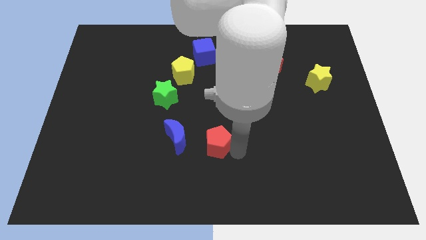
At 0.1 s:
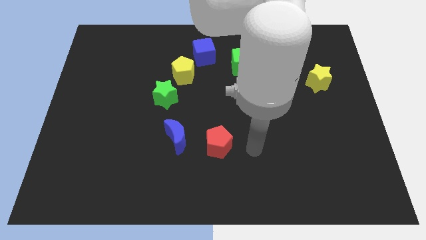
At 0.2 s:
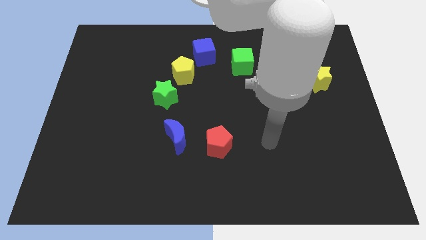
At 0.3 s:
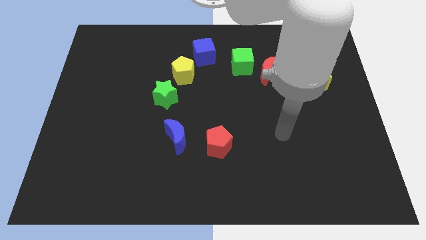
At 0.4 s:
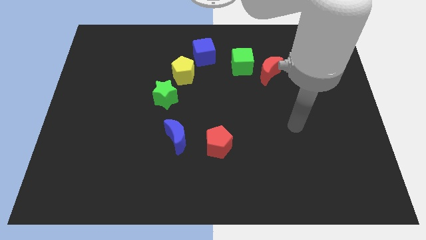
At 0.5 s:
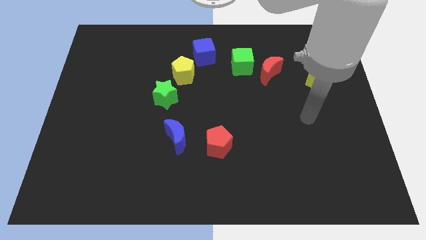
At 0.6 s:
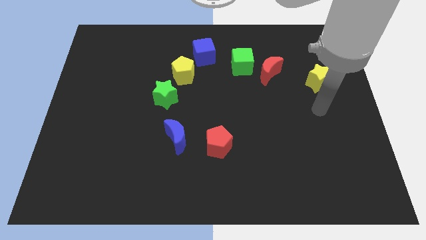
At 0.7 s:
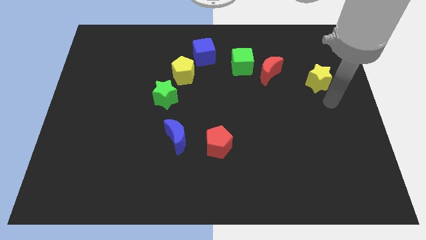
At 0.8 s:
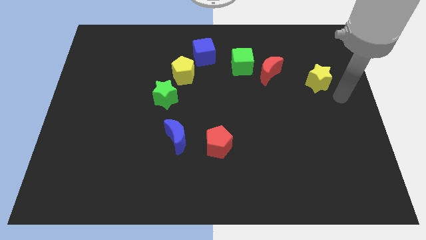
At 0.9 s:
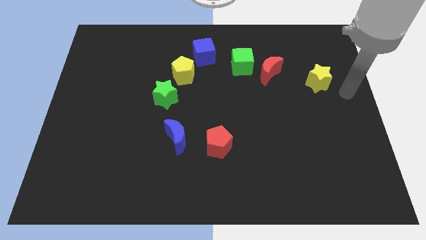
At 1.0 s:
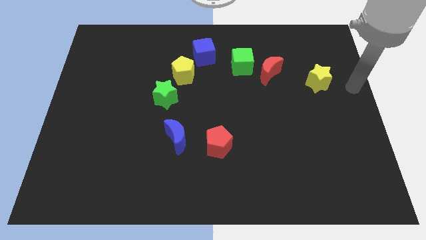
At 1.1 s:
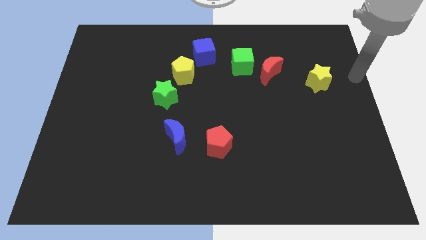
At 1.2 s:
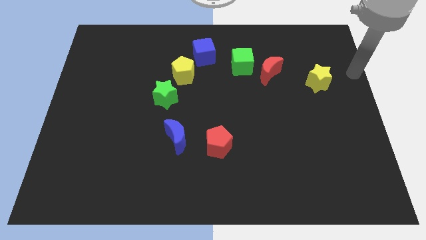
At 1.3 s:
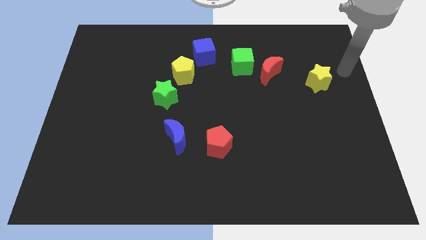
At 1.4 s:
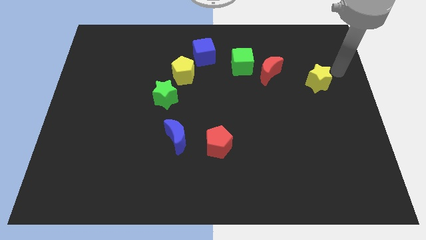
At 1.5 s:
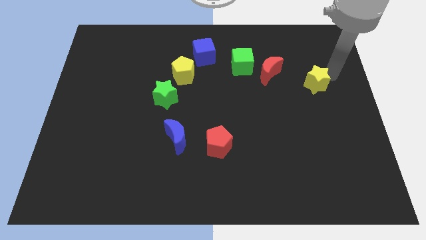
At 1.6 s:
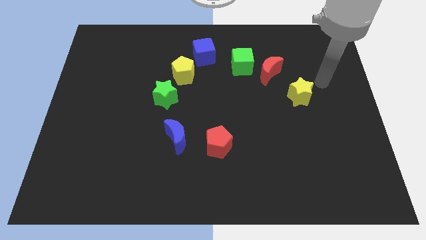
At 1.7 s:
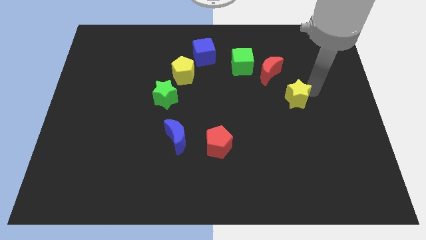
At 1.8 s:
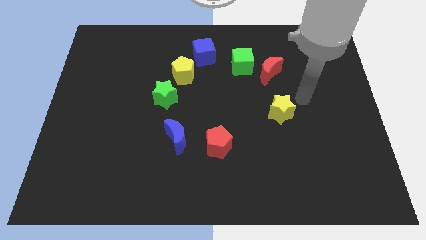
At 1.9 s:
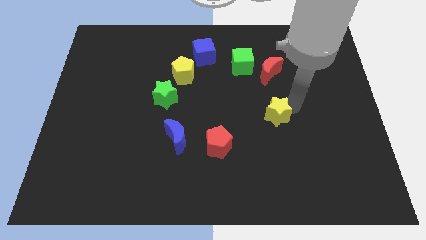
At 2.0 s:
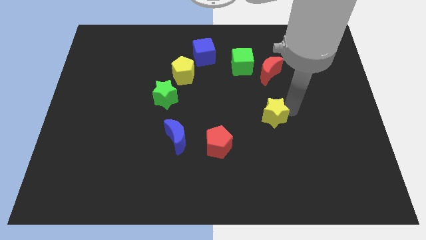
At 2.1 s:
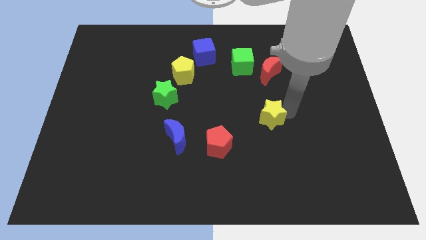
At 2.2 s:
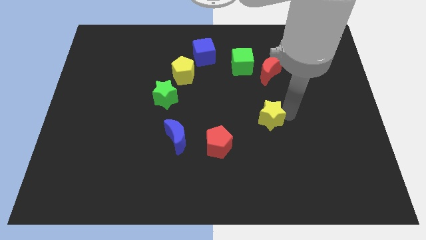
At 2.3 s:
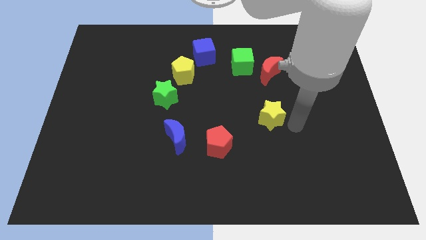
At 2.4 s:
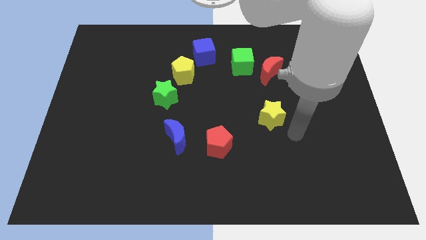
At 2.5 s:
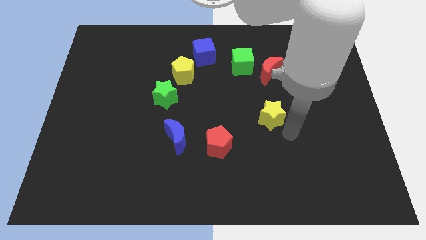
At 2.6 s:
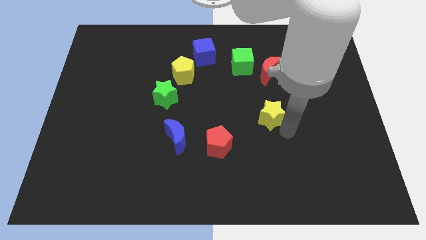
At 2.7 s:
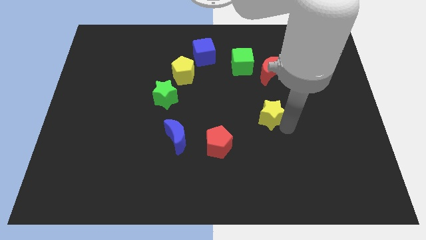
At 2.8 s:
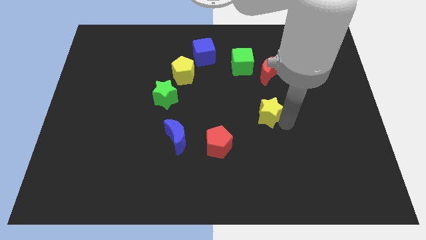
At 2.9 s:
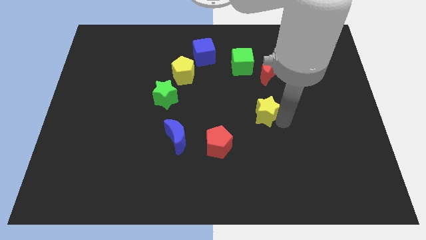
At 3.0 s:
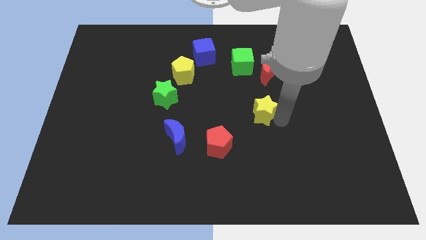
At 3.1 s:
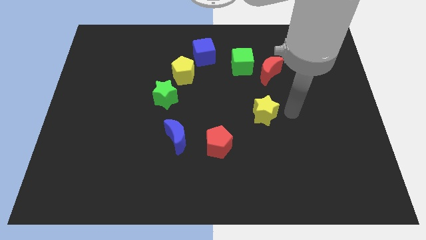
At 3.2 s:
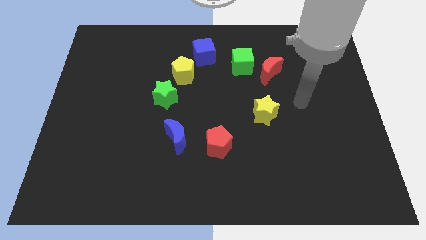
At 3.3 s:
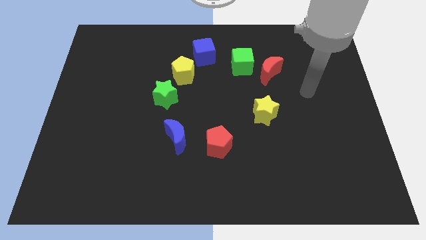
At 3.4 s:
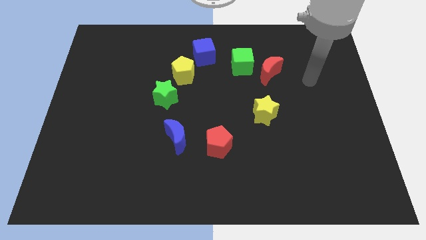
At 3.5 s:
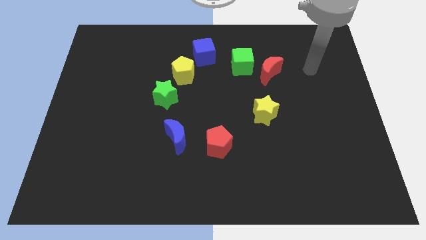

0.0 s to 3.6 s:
move the yellow star down to the red moon

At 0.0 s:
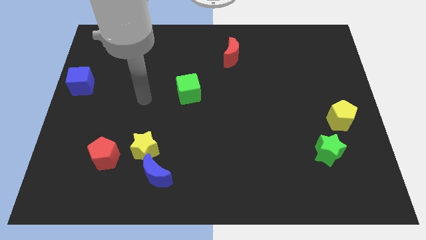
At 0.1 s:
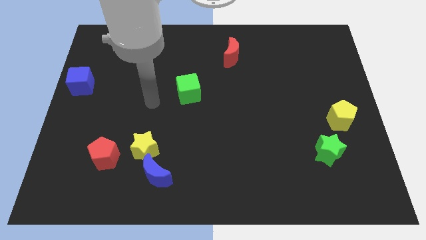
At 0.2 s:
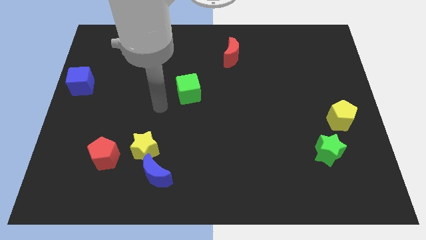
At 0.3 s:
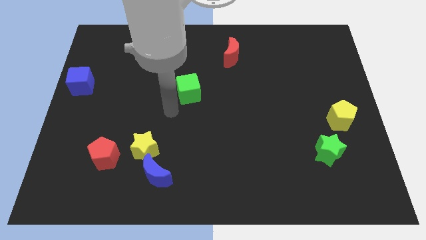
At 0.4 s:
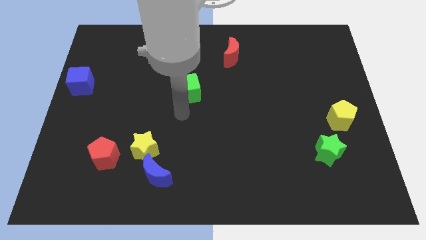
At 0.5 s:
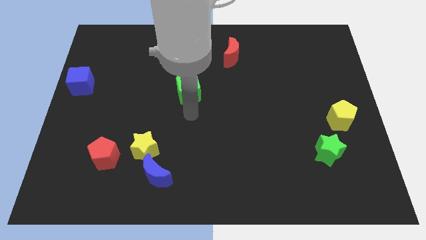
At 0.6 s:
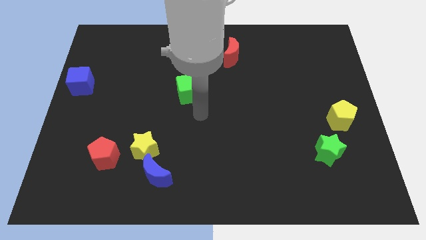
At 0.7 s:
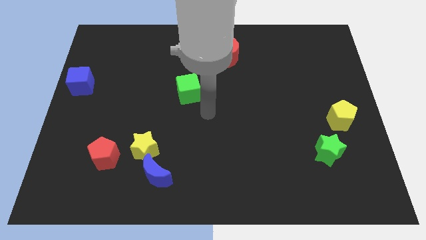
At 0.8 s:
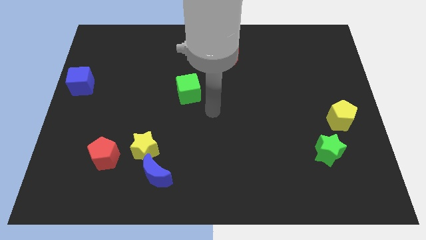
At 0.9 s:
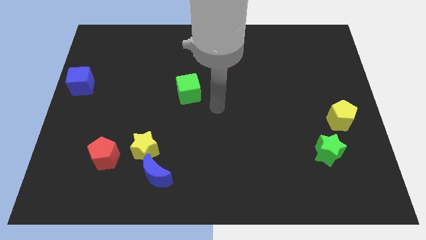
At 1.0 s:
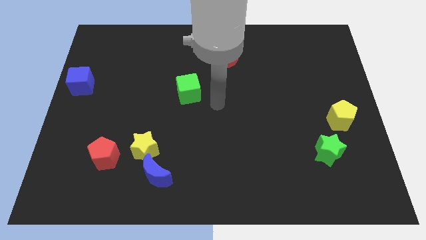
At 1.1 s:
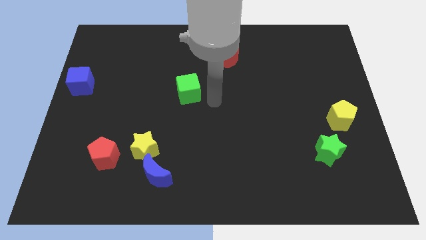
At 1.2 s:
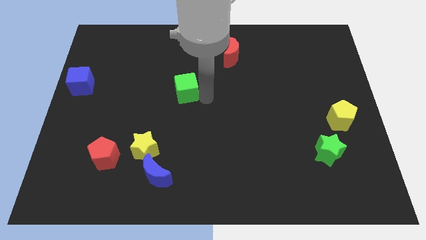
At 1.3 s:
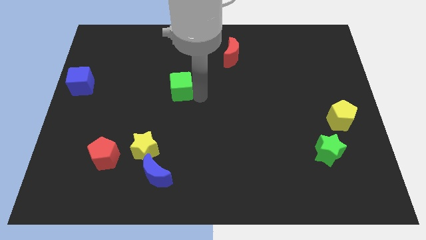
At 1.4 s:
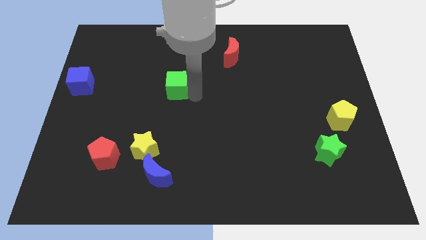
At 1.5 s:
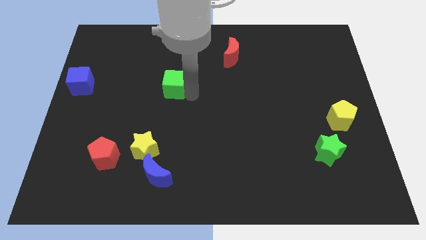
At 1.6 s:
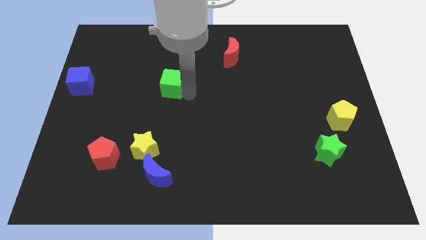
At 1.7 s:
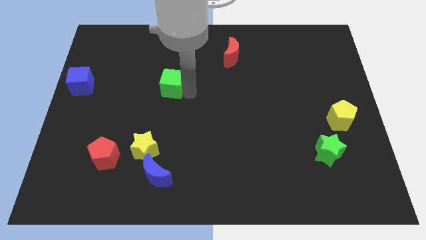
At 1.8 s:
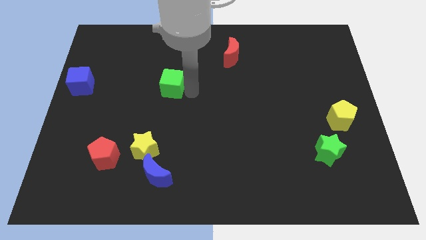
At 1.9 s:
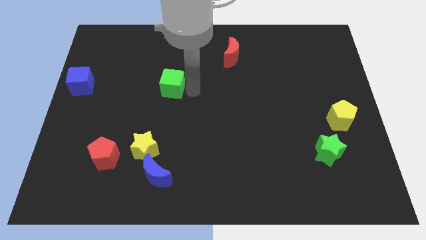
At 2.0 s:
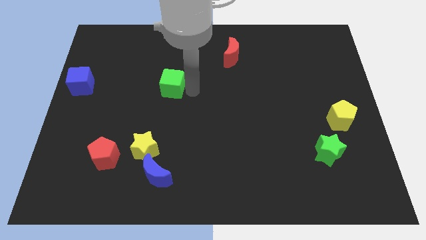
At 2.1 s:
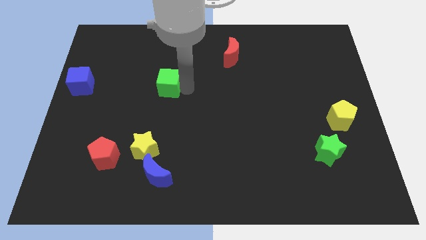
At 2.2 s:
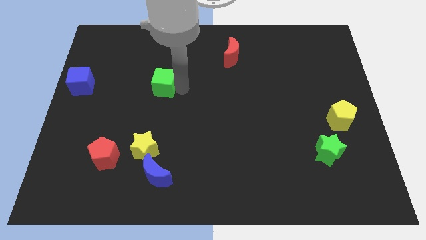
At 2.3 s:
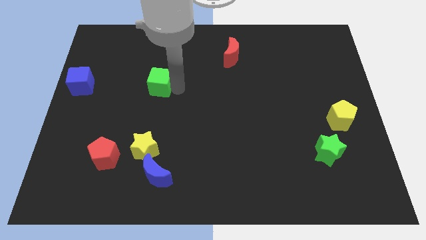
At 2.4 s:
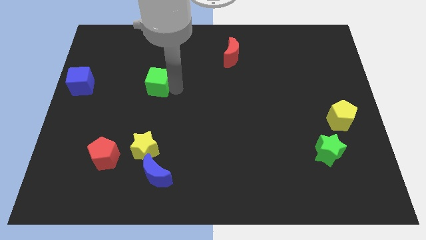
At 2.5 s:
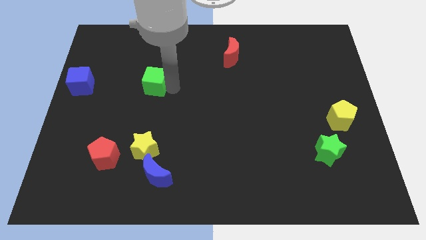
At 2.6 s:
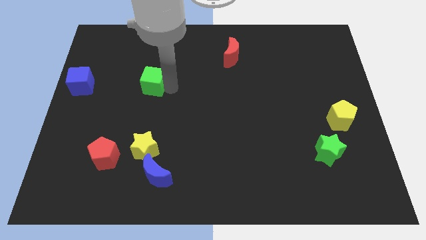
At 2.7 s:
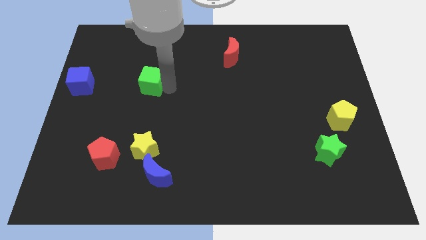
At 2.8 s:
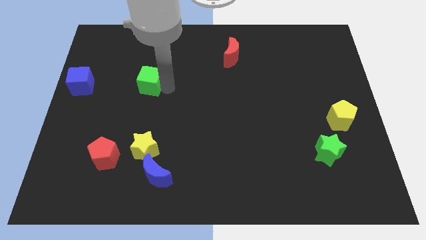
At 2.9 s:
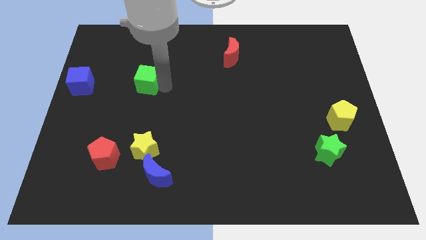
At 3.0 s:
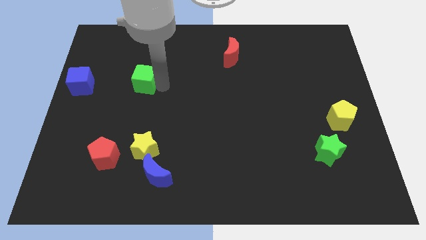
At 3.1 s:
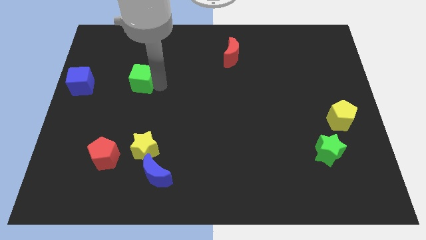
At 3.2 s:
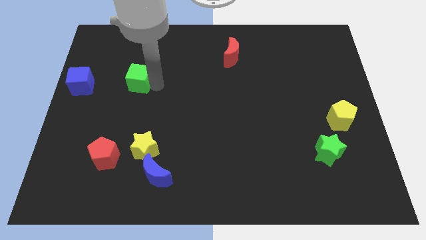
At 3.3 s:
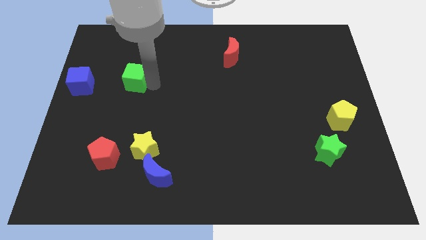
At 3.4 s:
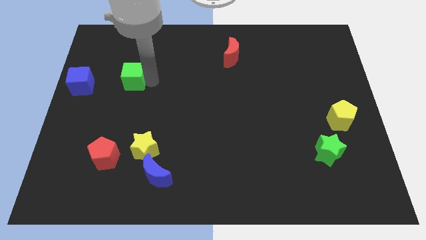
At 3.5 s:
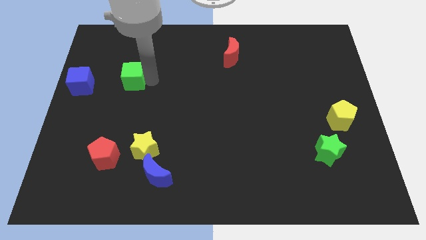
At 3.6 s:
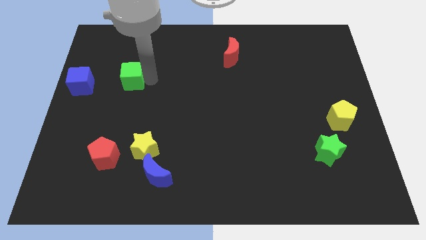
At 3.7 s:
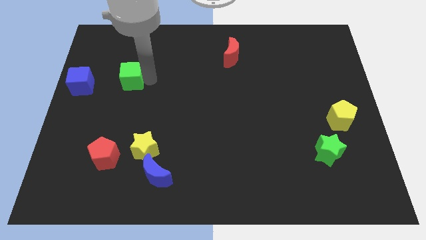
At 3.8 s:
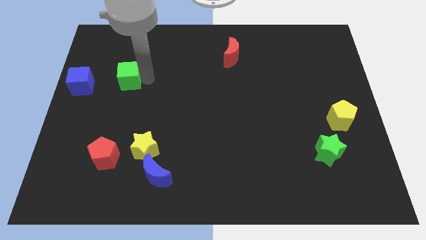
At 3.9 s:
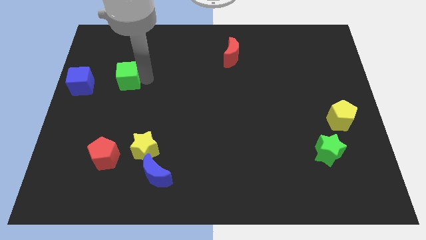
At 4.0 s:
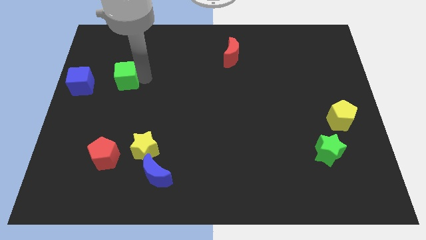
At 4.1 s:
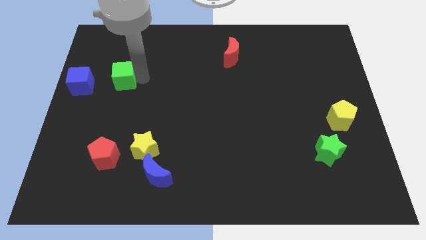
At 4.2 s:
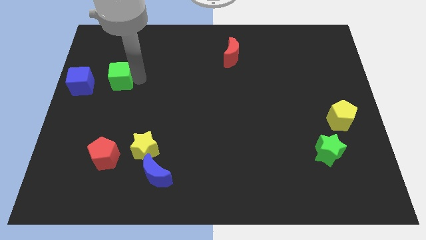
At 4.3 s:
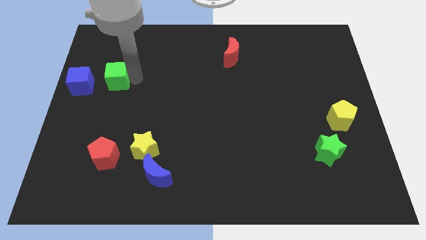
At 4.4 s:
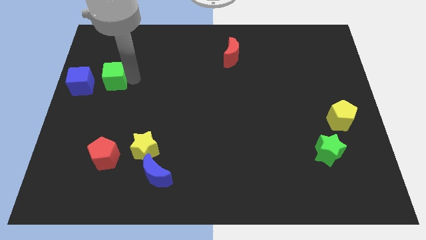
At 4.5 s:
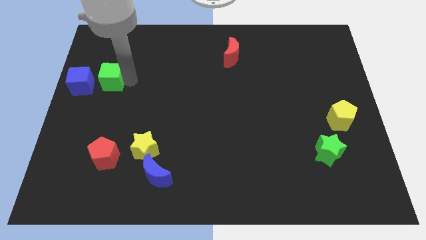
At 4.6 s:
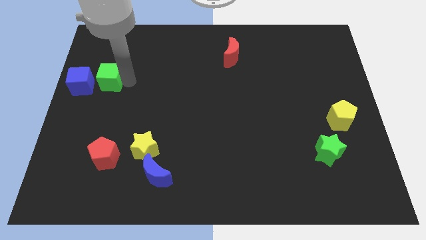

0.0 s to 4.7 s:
push the green cube to the right of the blue cube

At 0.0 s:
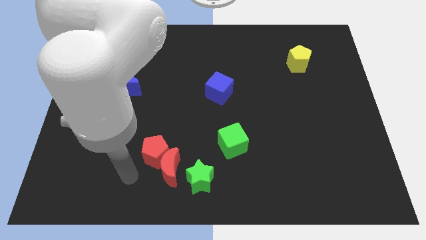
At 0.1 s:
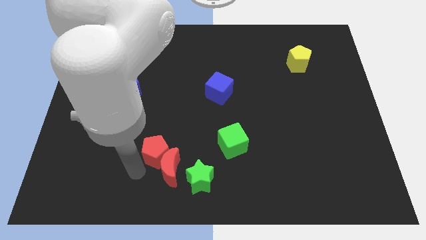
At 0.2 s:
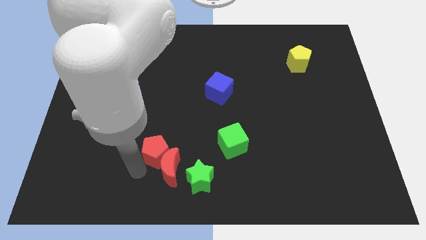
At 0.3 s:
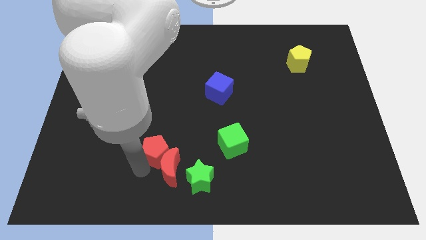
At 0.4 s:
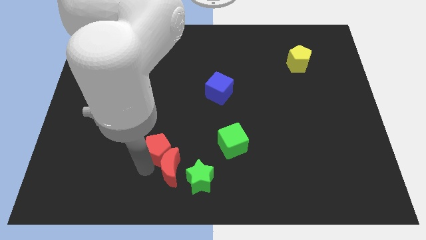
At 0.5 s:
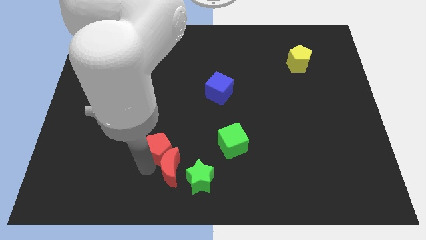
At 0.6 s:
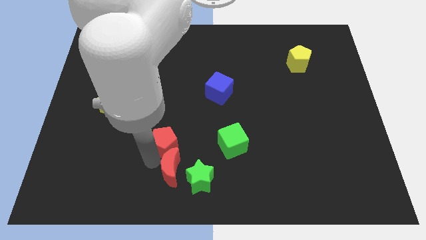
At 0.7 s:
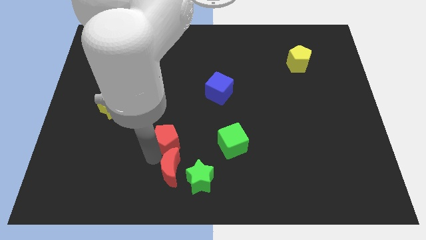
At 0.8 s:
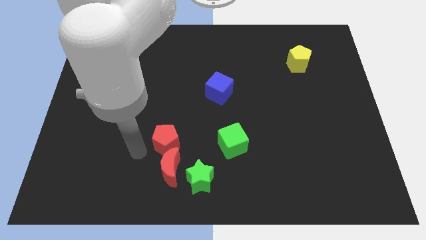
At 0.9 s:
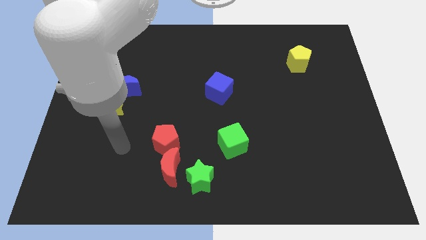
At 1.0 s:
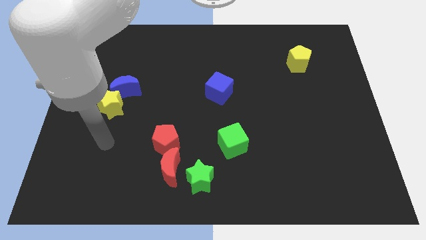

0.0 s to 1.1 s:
place red pentagon on top of red moon
